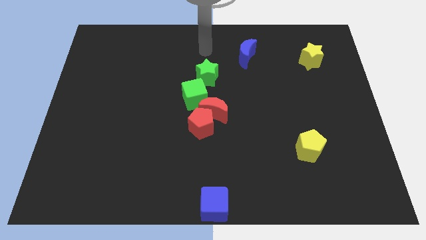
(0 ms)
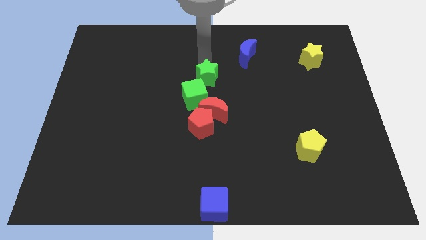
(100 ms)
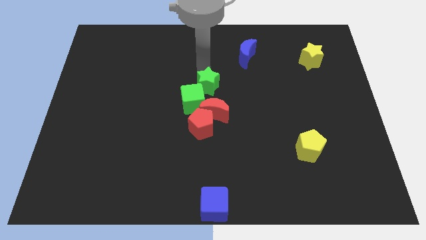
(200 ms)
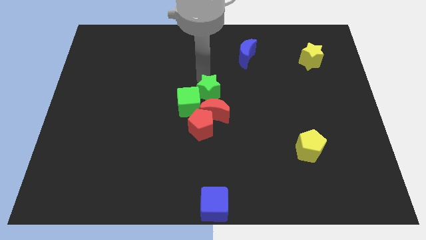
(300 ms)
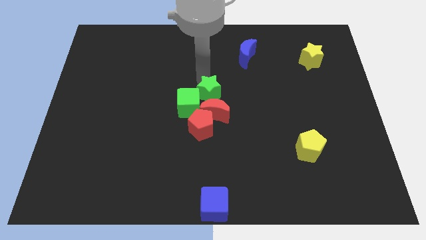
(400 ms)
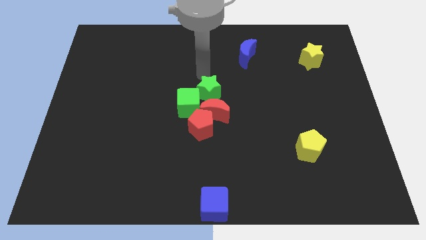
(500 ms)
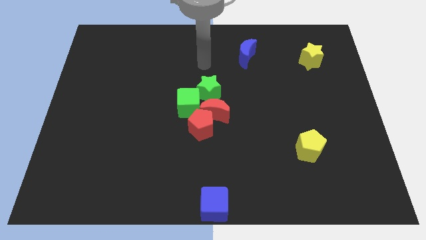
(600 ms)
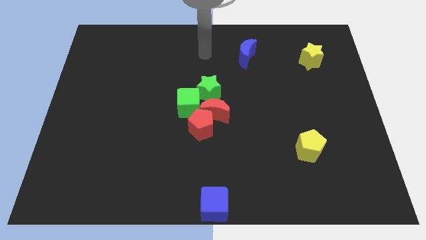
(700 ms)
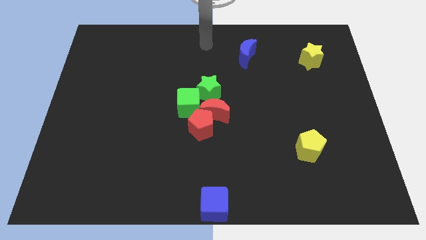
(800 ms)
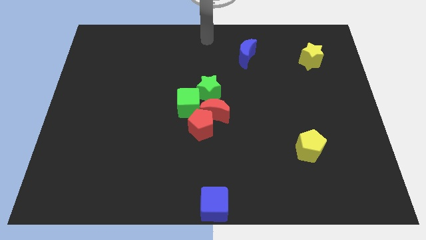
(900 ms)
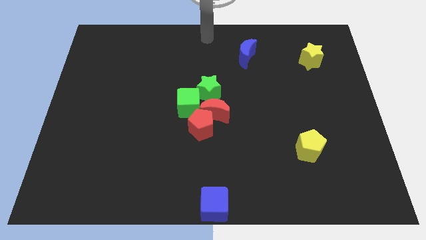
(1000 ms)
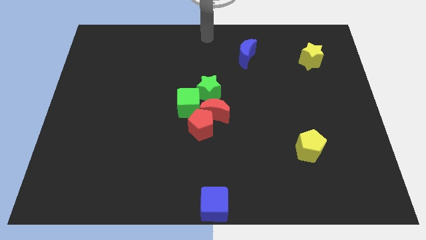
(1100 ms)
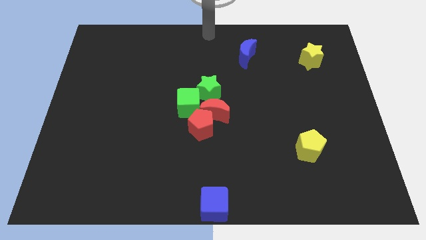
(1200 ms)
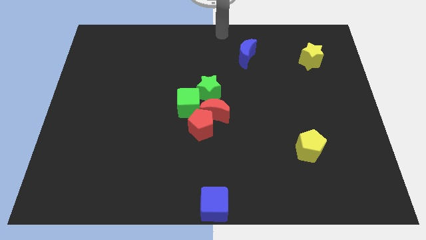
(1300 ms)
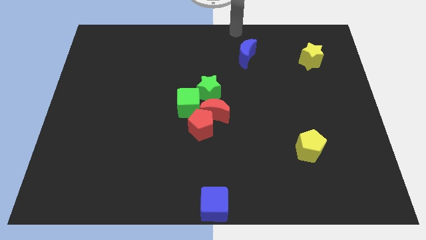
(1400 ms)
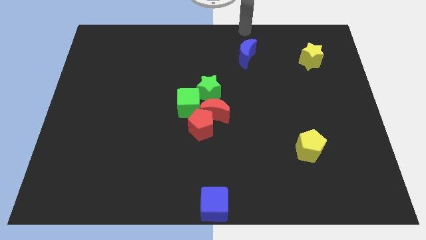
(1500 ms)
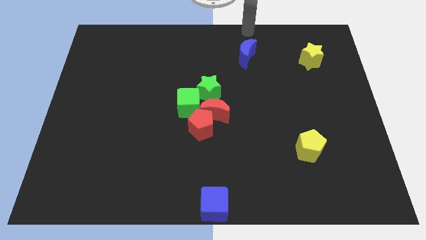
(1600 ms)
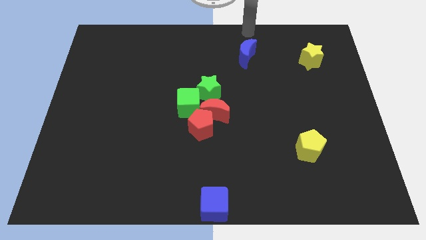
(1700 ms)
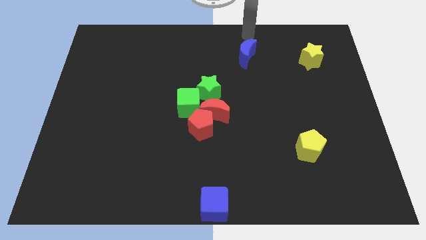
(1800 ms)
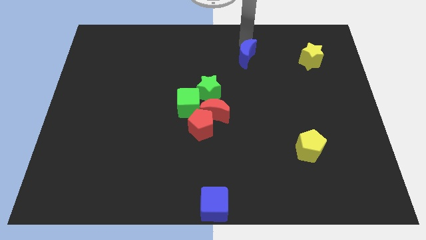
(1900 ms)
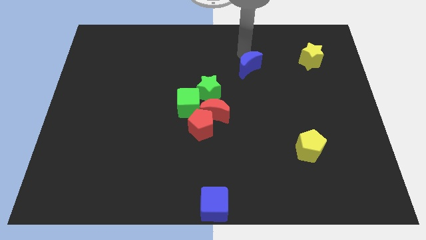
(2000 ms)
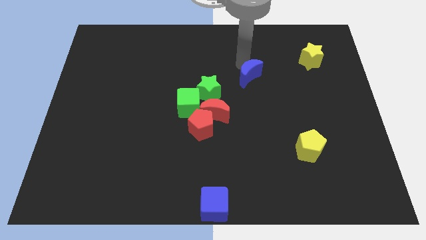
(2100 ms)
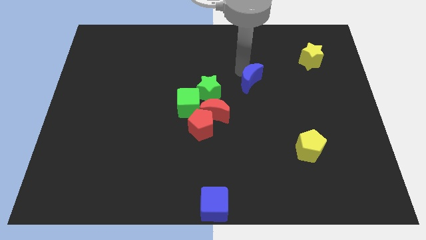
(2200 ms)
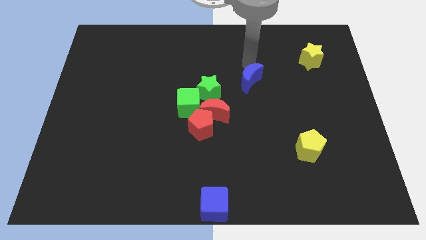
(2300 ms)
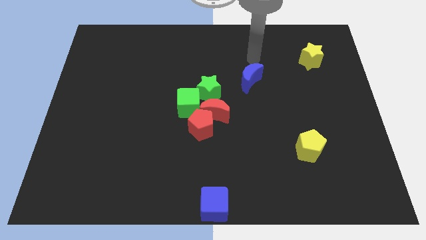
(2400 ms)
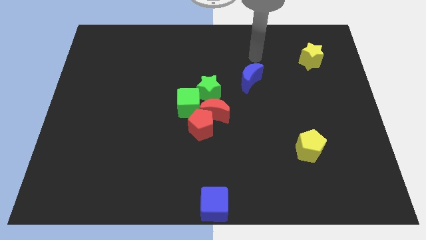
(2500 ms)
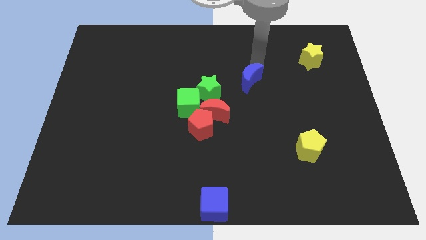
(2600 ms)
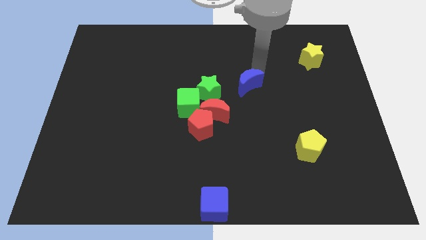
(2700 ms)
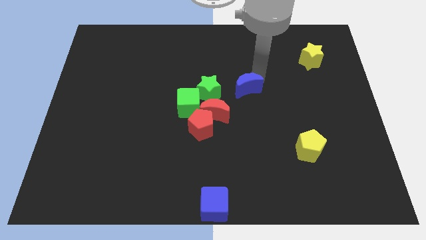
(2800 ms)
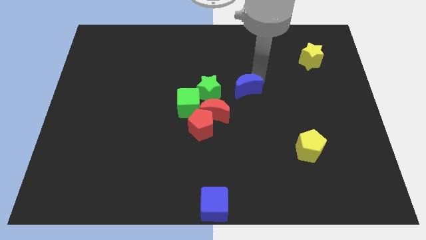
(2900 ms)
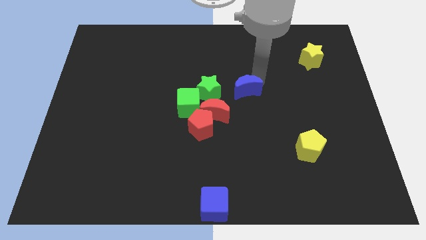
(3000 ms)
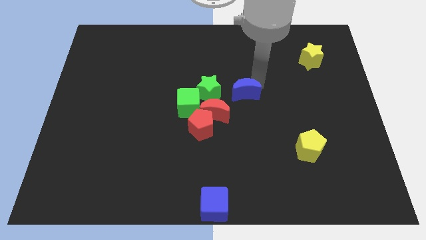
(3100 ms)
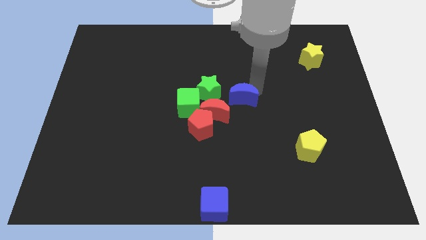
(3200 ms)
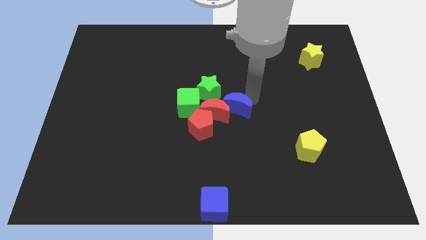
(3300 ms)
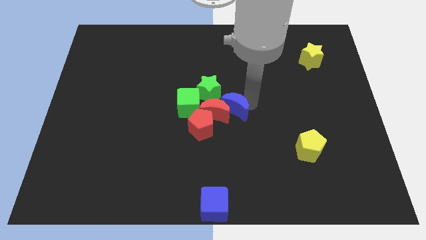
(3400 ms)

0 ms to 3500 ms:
push the green star into the green cube

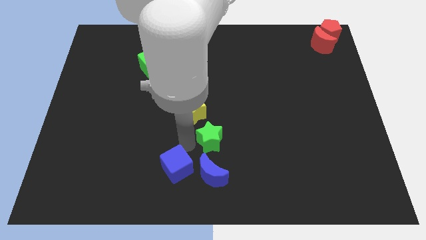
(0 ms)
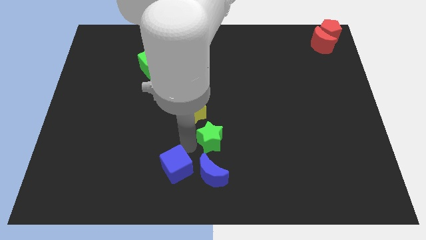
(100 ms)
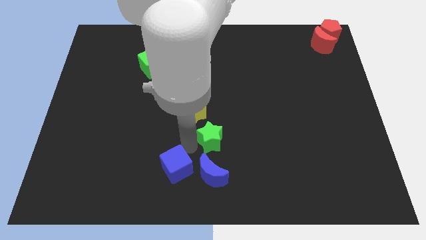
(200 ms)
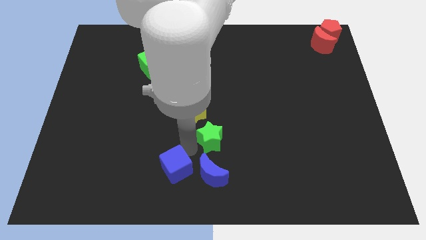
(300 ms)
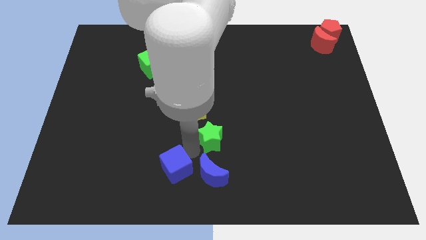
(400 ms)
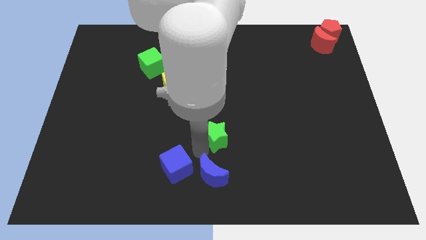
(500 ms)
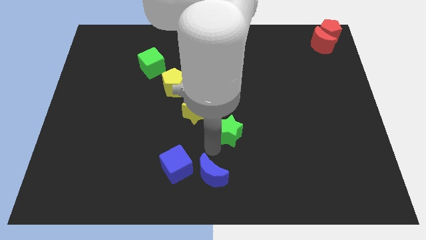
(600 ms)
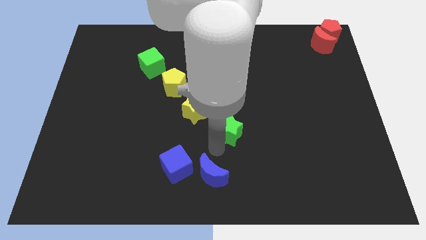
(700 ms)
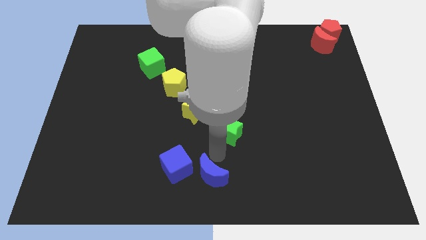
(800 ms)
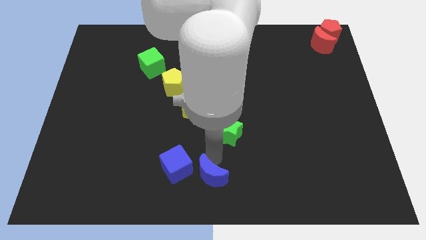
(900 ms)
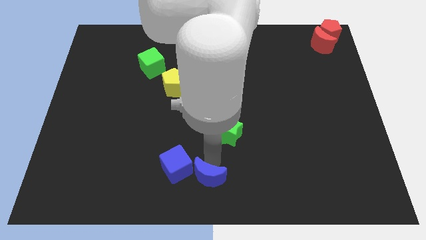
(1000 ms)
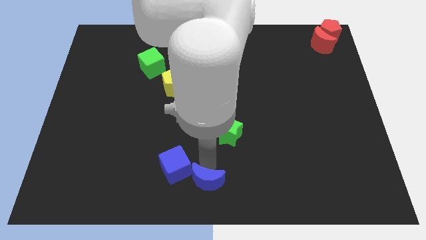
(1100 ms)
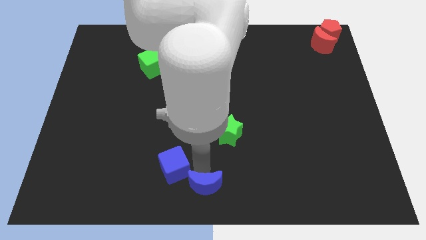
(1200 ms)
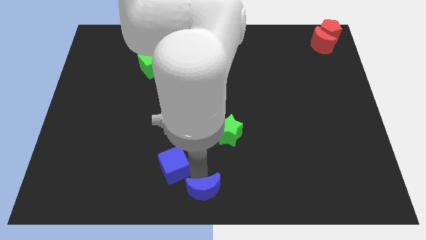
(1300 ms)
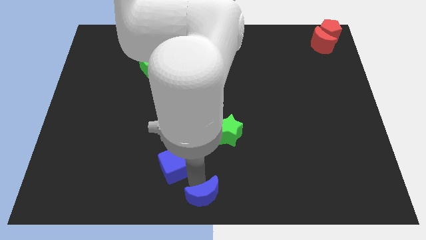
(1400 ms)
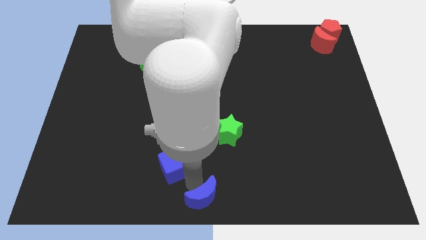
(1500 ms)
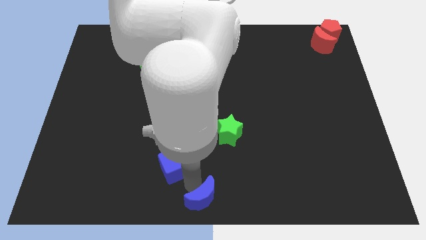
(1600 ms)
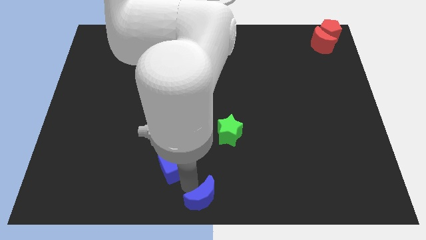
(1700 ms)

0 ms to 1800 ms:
separate the green star and the blue moon

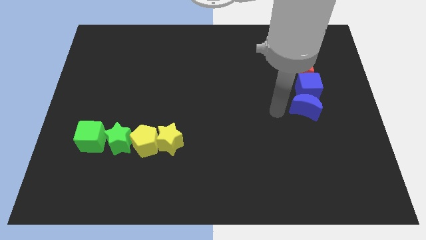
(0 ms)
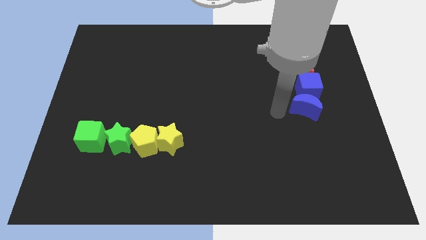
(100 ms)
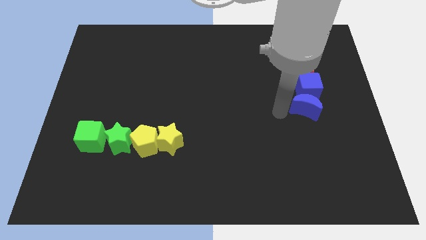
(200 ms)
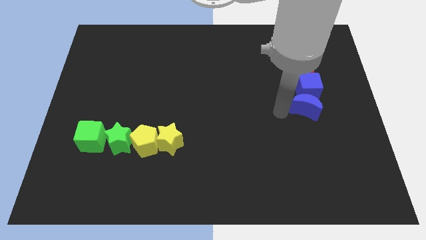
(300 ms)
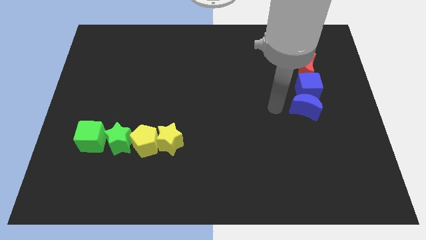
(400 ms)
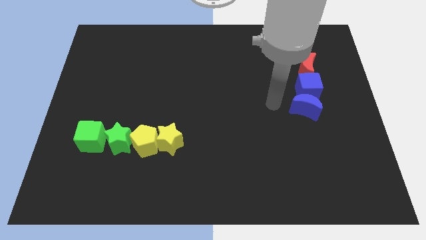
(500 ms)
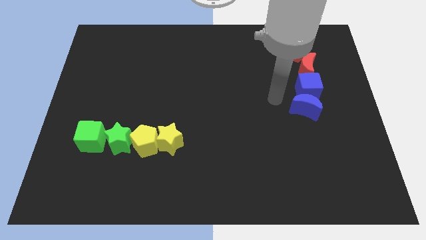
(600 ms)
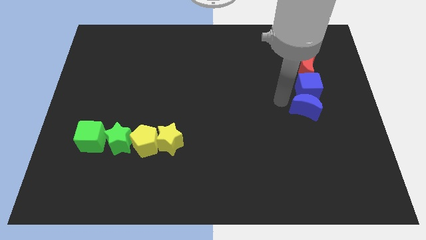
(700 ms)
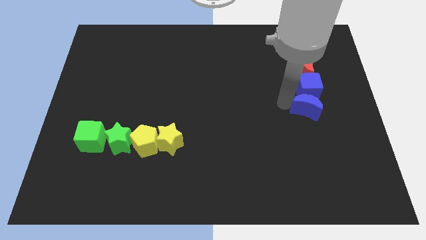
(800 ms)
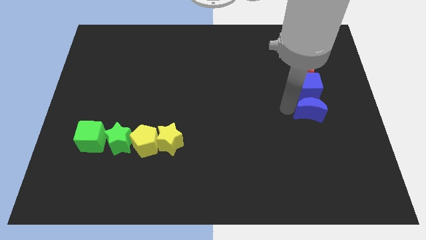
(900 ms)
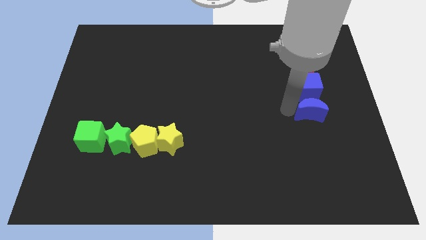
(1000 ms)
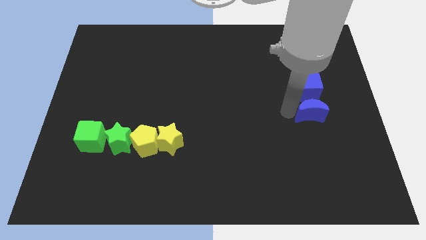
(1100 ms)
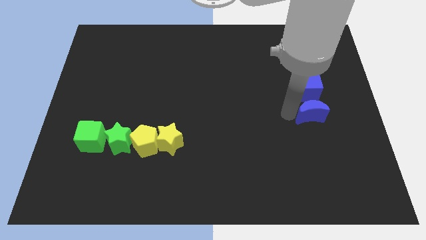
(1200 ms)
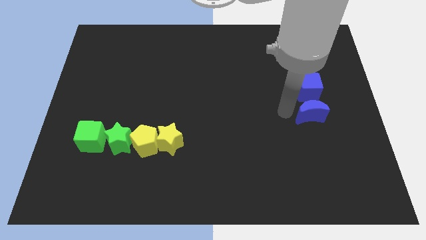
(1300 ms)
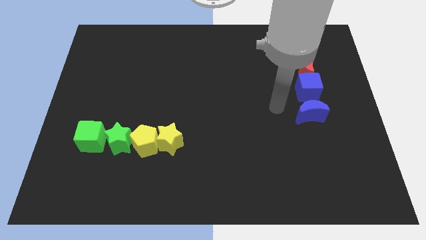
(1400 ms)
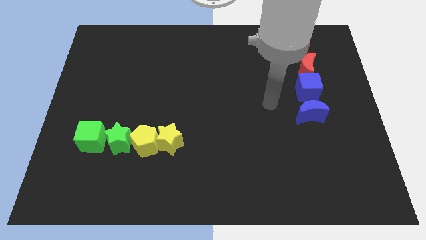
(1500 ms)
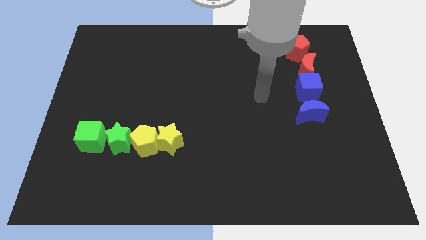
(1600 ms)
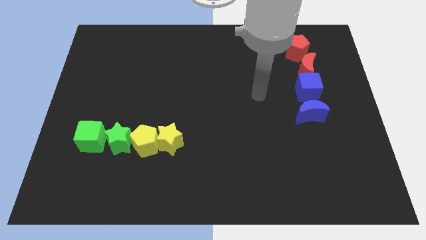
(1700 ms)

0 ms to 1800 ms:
slightly push the blue crescent below the blue cube

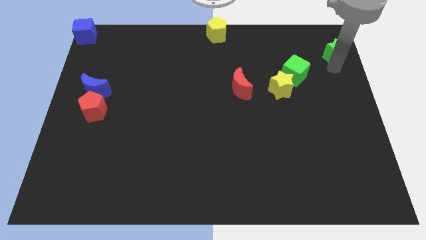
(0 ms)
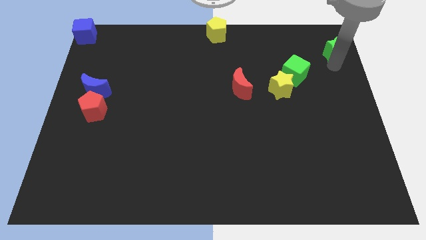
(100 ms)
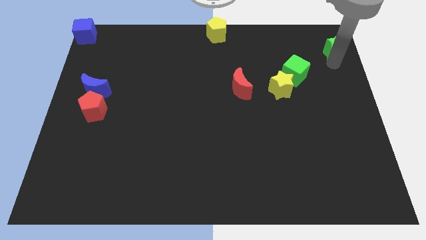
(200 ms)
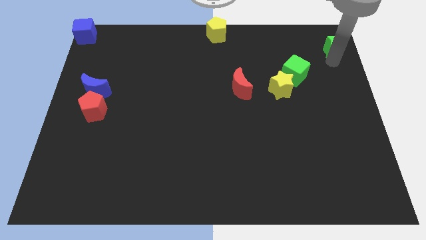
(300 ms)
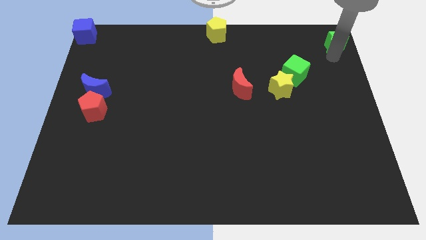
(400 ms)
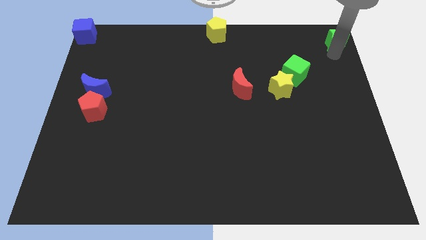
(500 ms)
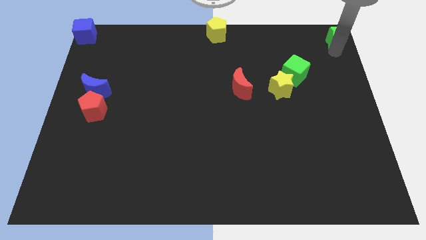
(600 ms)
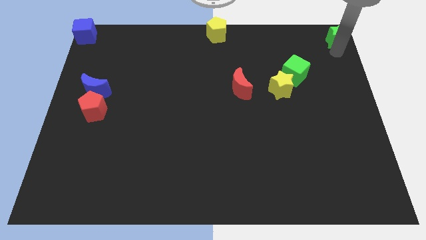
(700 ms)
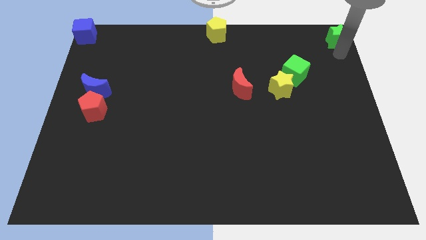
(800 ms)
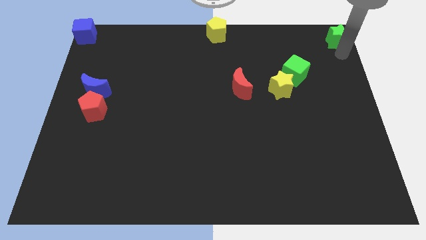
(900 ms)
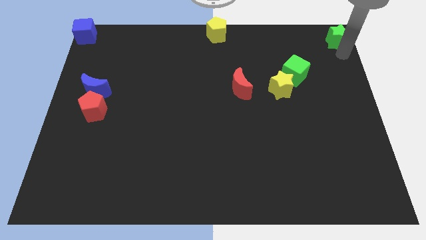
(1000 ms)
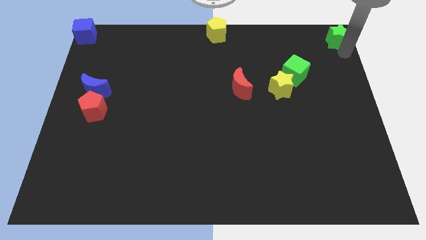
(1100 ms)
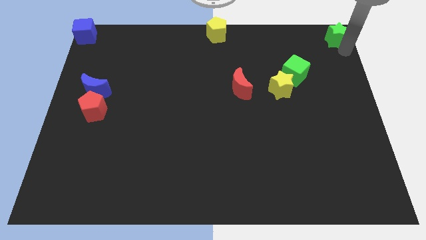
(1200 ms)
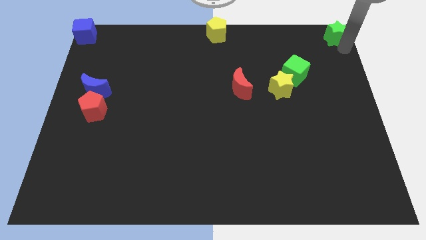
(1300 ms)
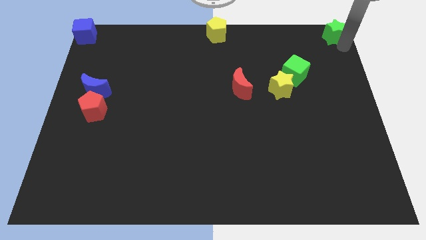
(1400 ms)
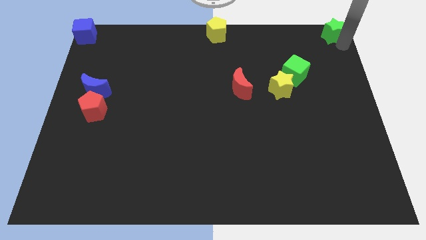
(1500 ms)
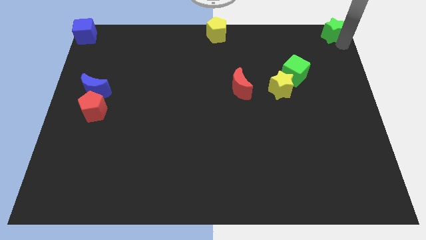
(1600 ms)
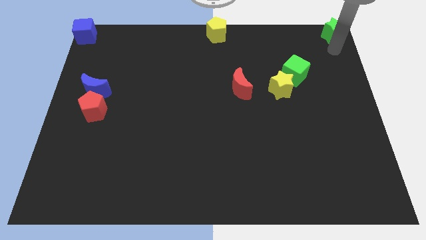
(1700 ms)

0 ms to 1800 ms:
push the green star to the top right of the board
